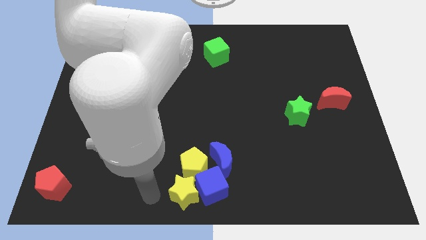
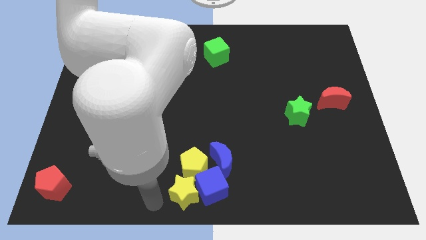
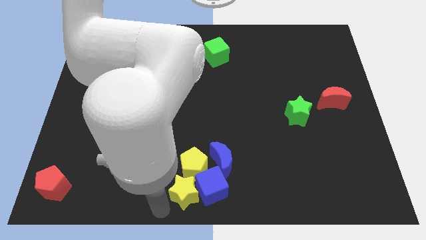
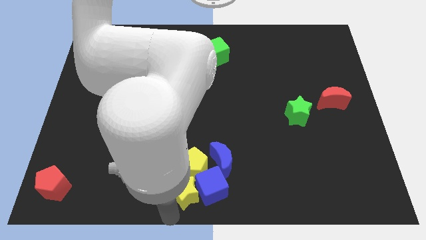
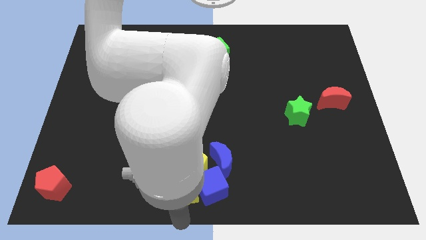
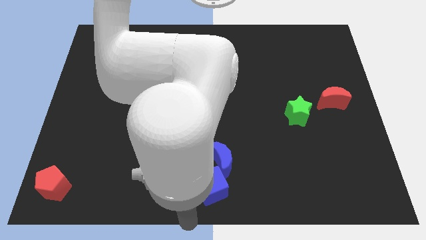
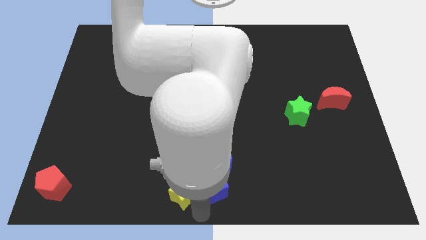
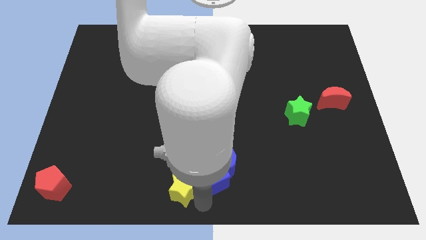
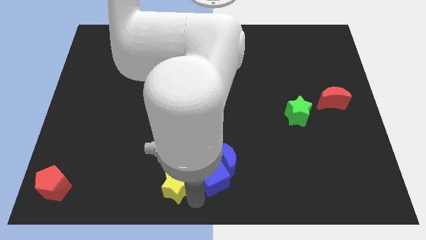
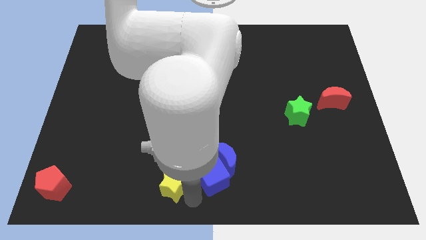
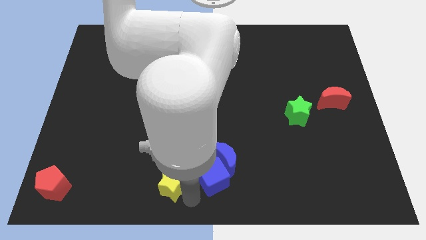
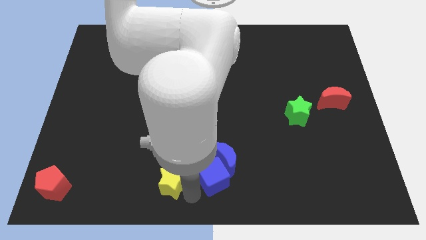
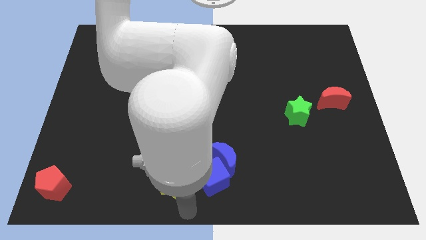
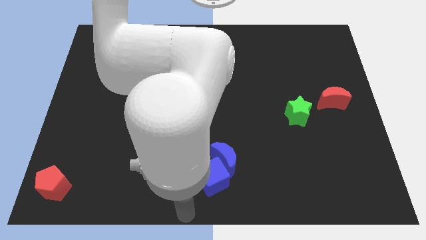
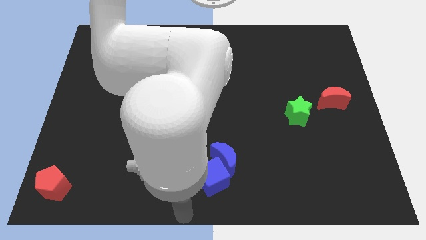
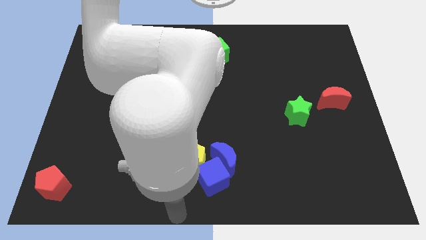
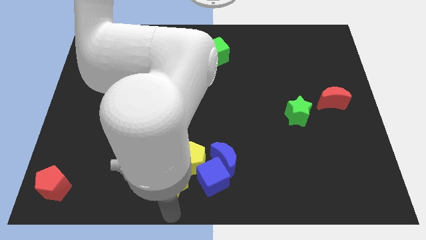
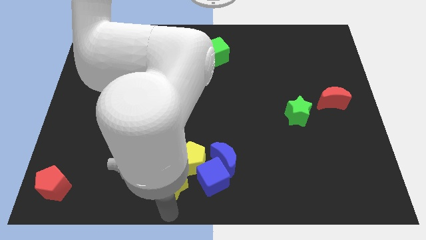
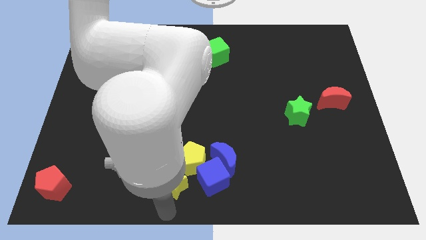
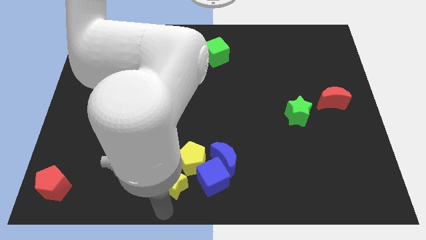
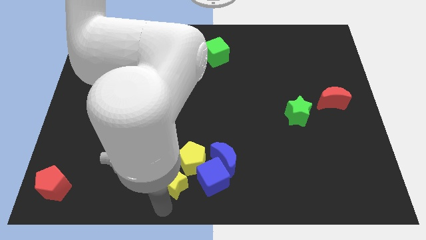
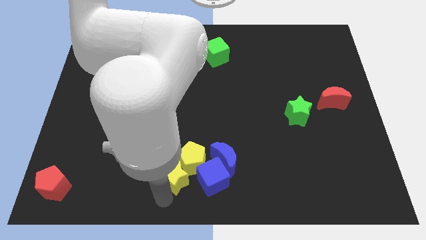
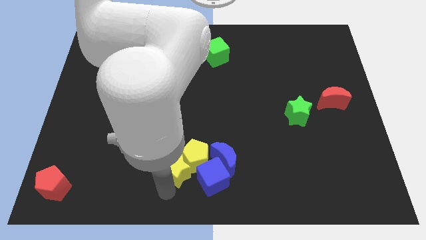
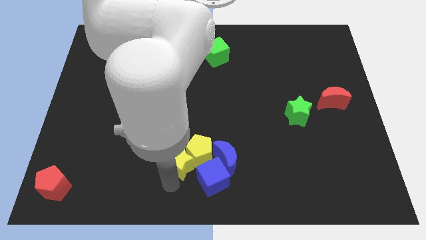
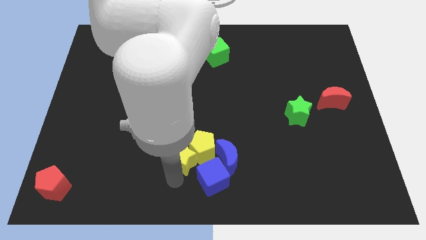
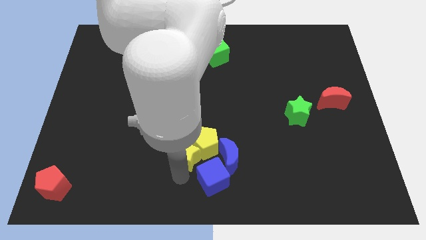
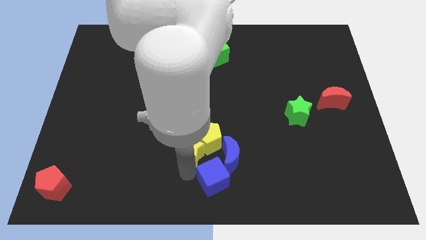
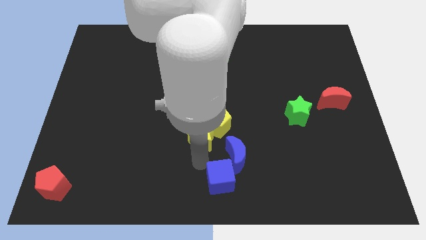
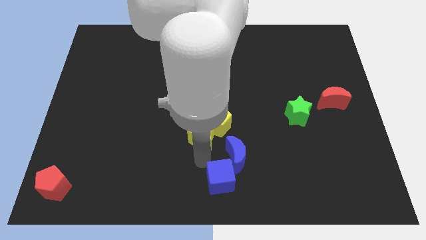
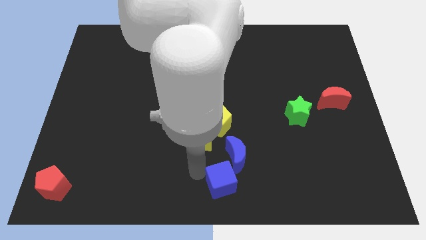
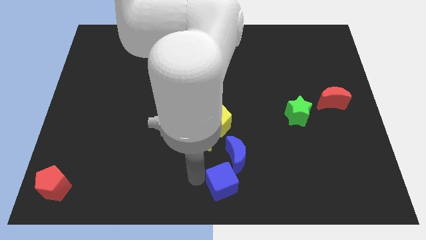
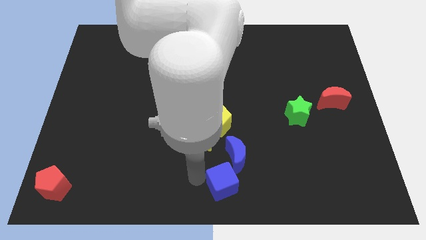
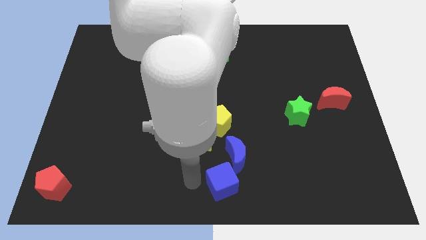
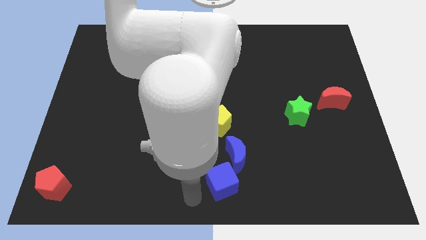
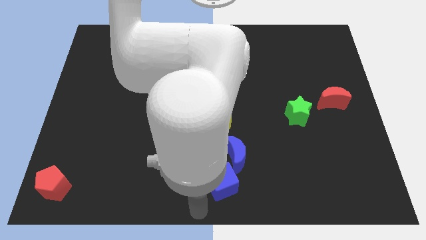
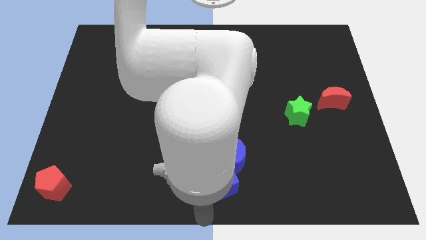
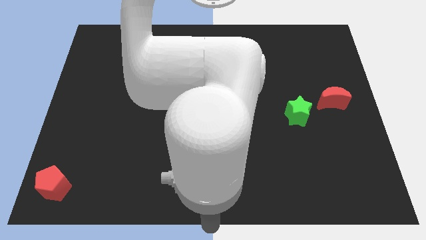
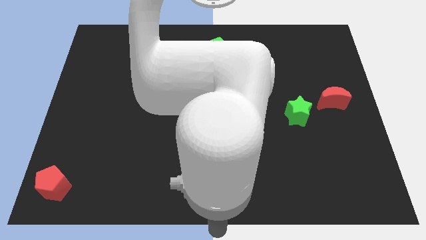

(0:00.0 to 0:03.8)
separate the yellow blocks from blue blocks

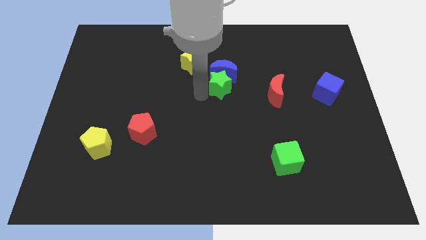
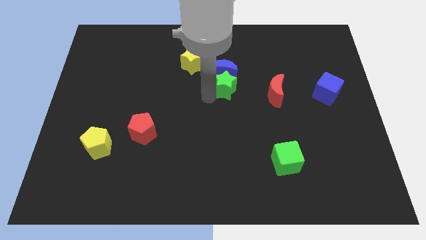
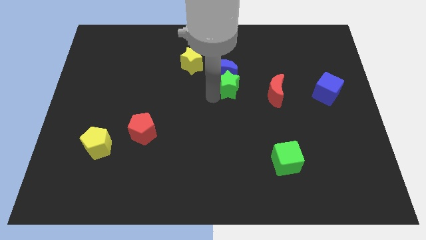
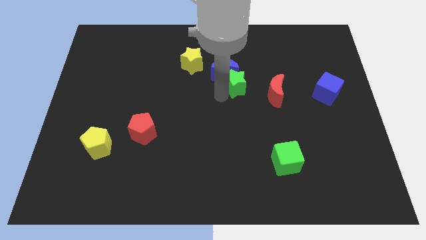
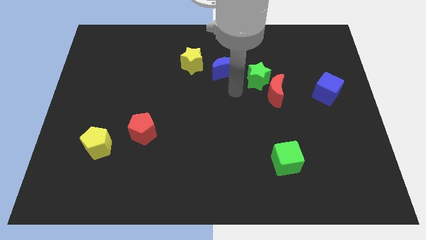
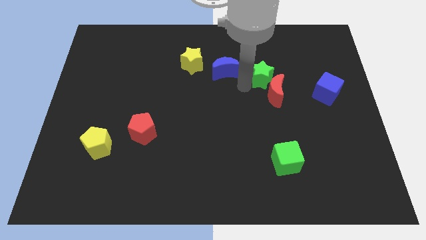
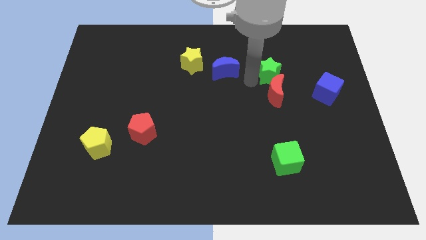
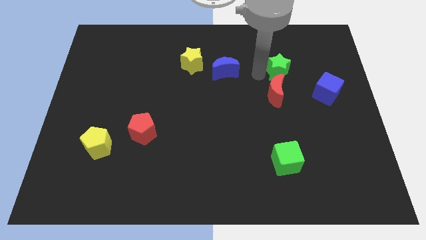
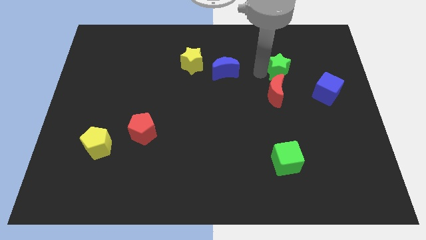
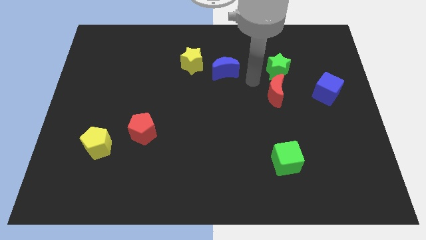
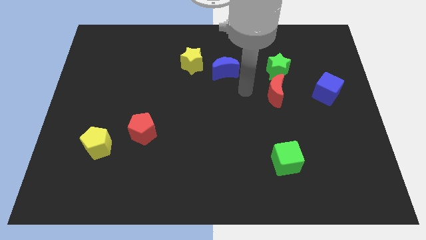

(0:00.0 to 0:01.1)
move the green star above the red moon

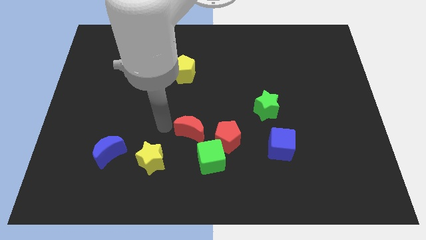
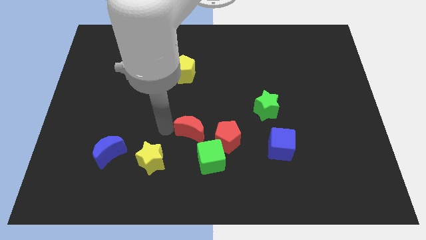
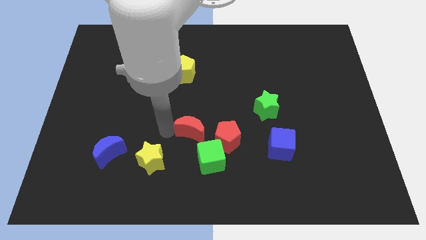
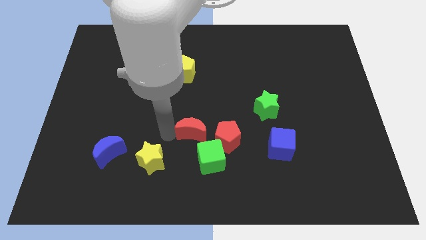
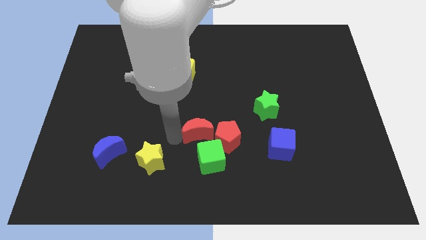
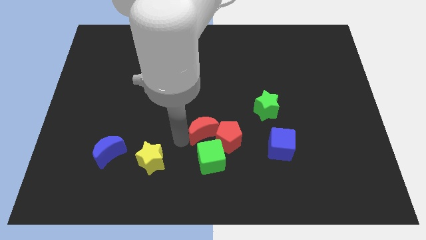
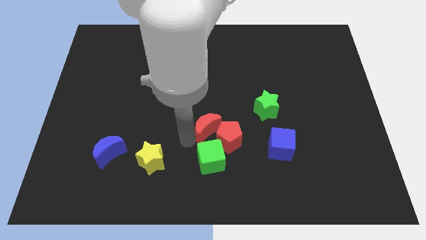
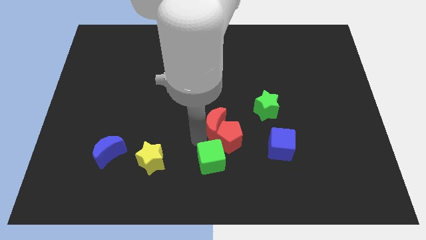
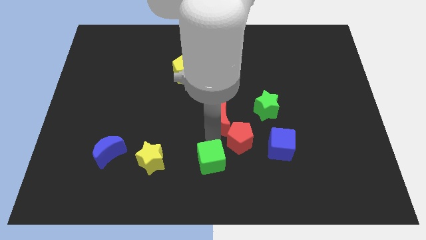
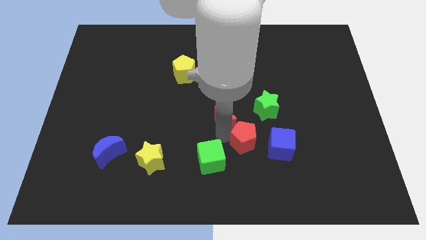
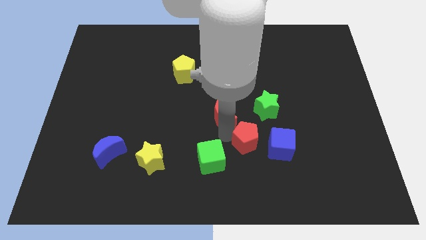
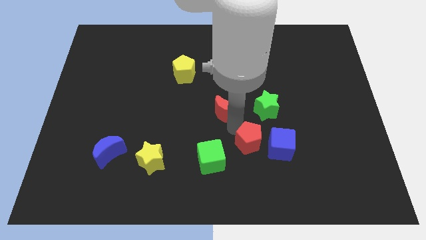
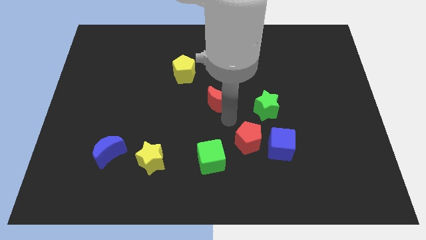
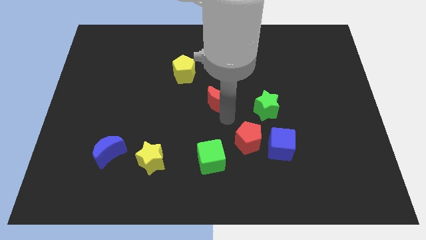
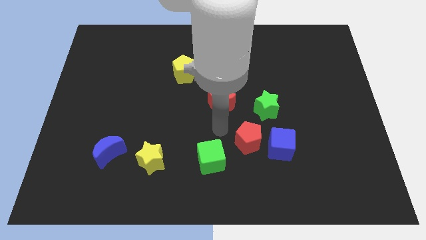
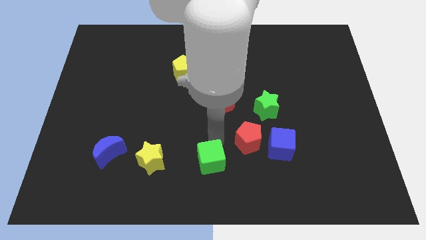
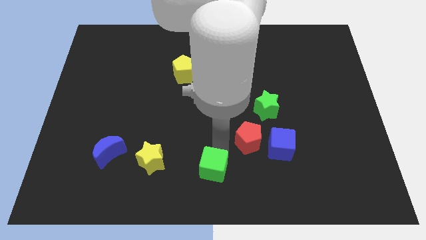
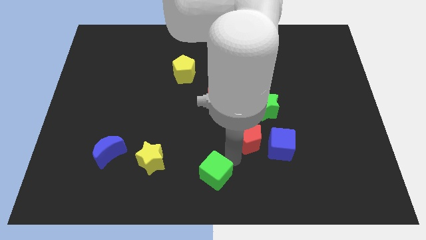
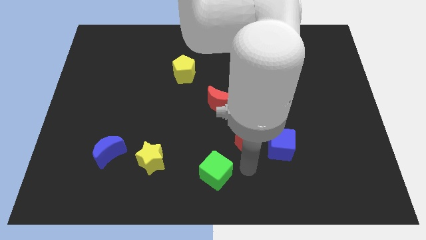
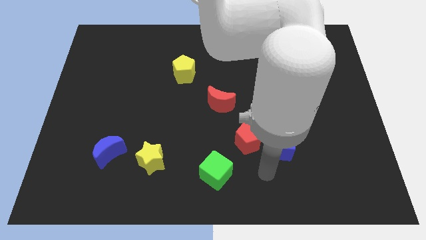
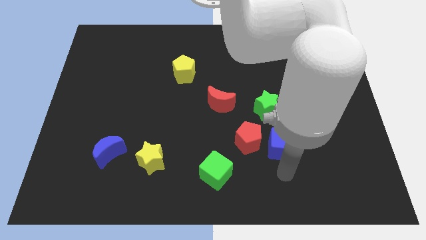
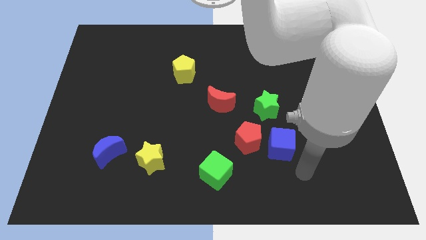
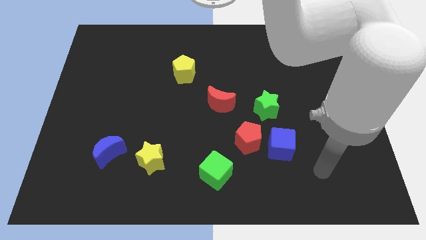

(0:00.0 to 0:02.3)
separate red pentagon and red moon

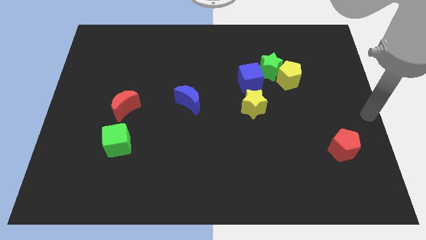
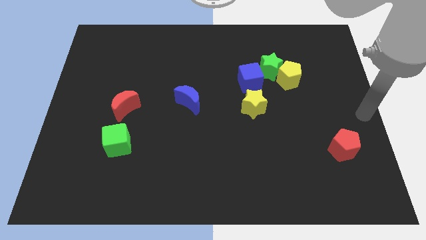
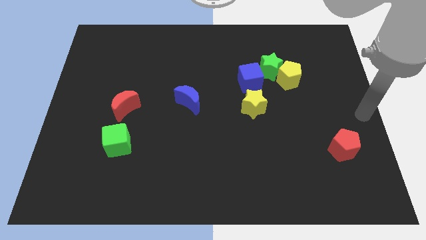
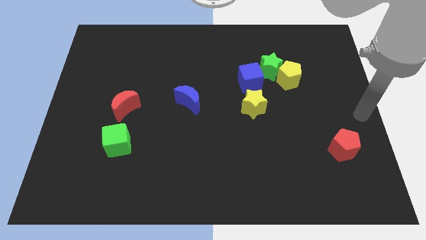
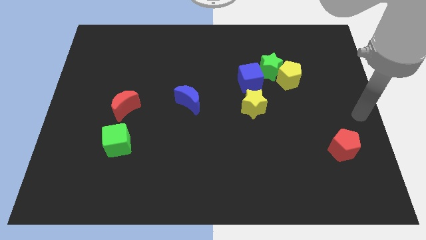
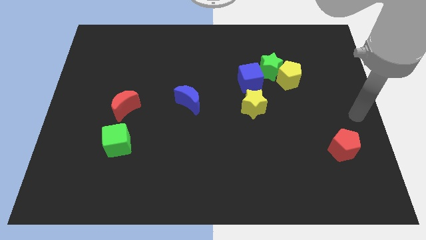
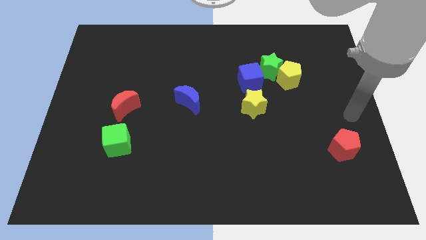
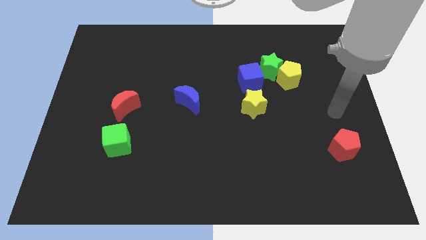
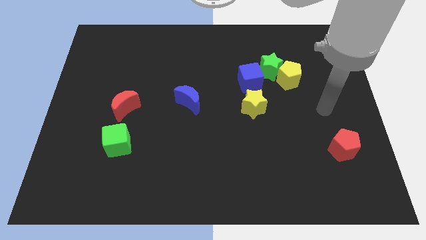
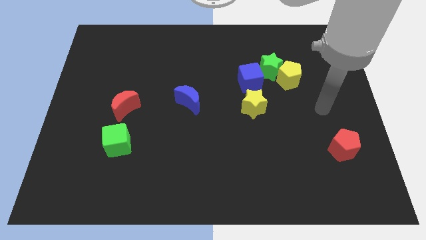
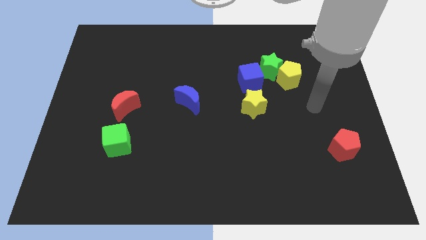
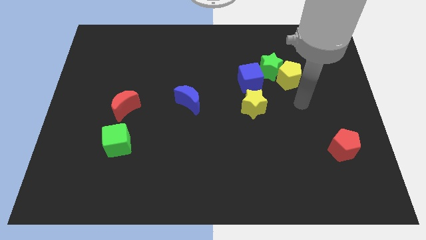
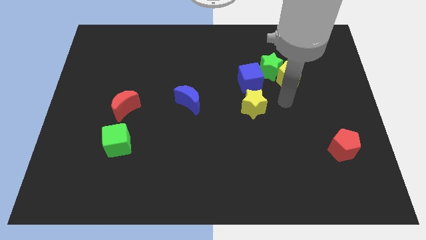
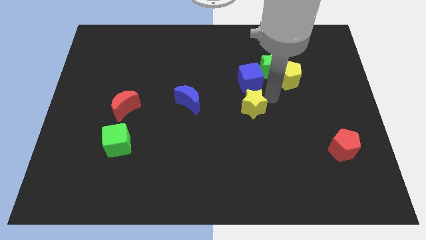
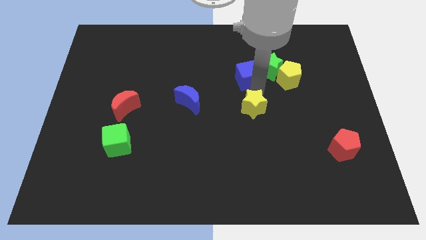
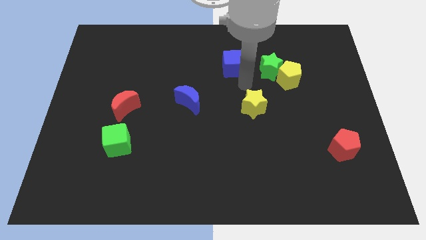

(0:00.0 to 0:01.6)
move the blue cube to the left of the green star

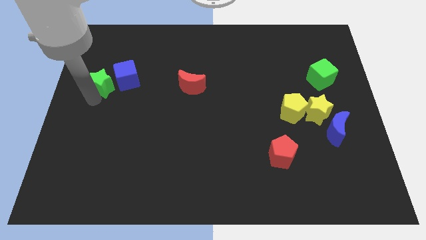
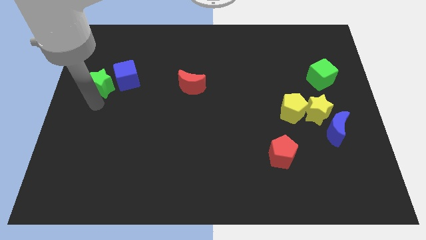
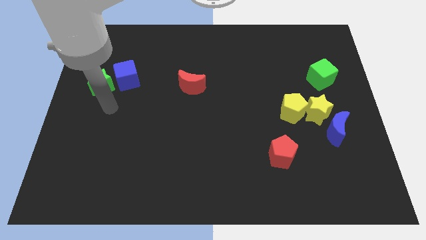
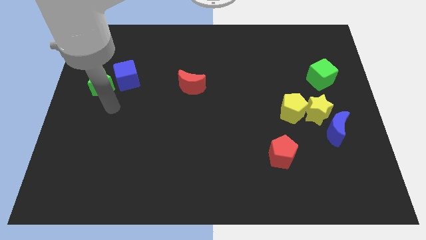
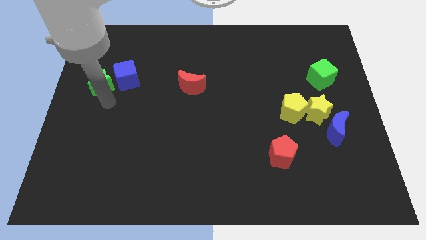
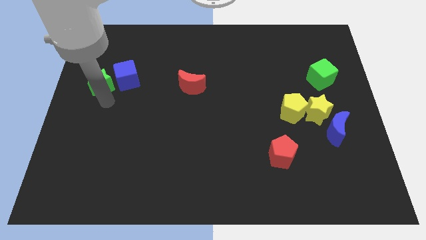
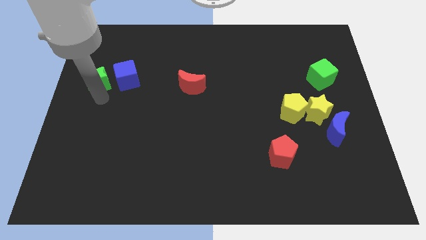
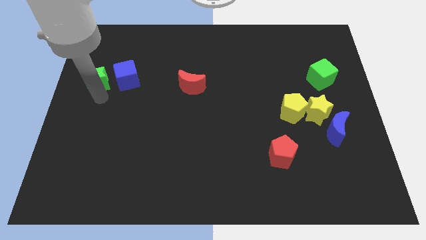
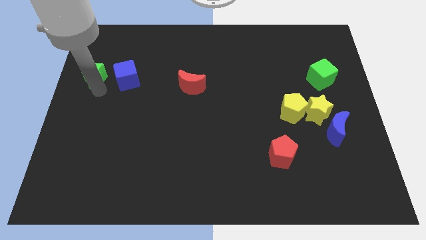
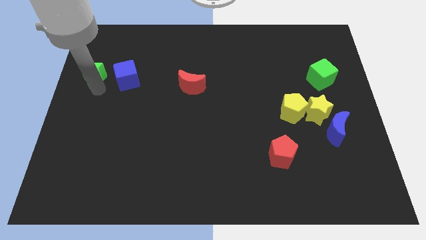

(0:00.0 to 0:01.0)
move green star left beside the blue cube
